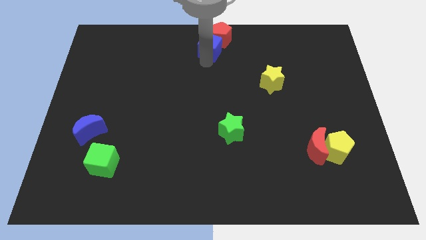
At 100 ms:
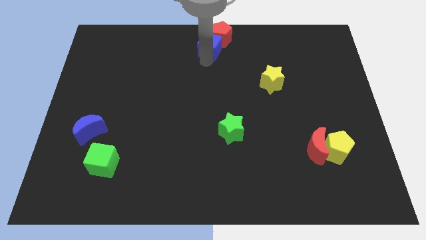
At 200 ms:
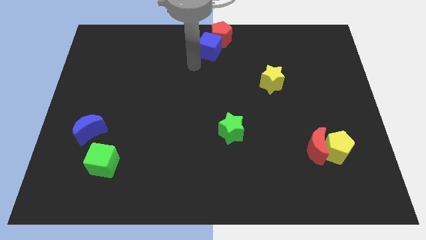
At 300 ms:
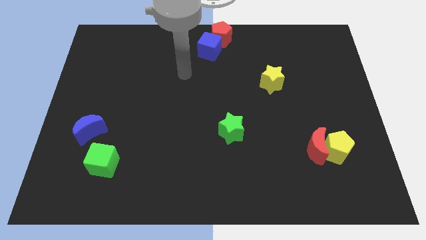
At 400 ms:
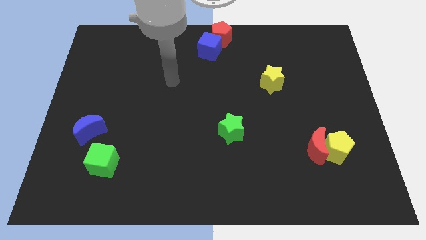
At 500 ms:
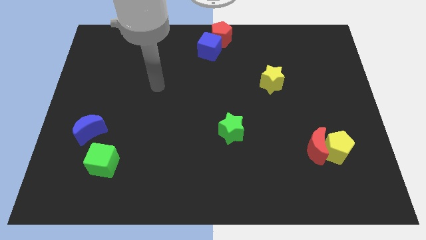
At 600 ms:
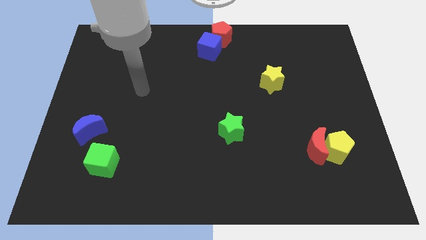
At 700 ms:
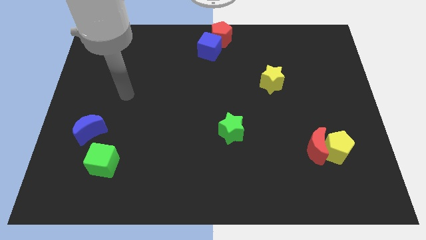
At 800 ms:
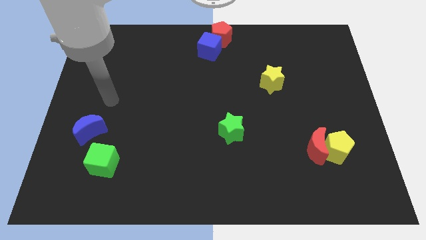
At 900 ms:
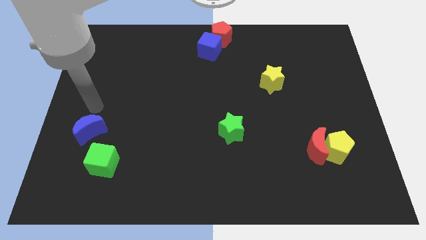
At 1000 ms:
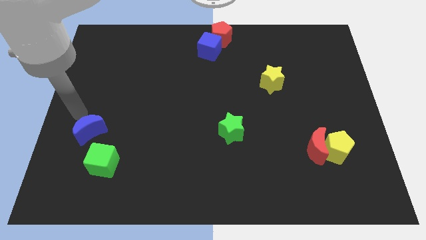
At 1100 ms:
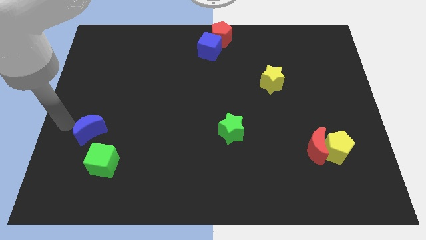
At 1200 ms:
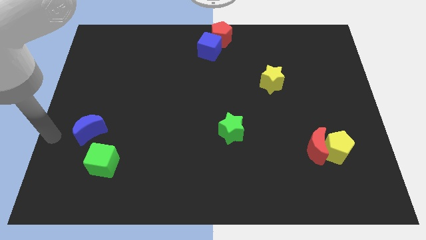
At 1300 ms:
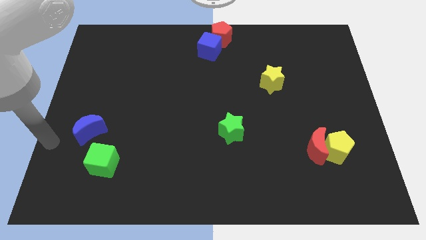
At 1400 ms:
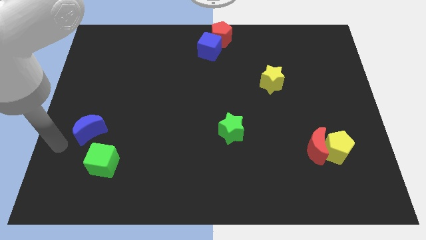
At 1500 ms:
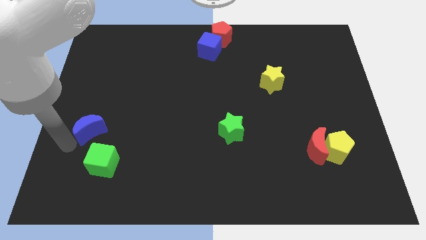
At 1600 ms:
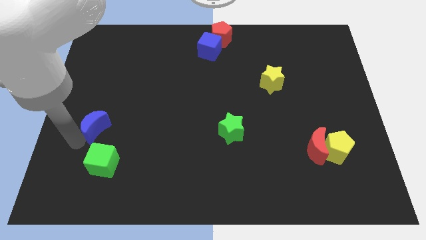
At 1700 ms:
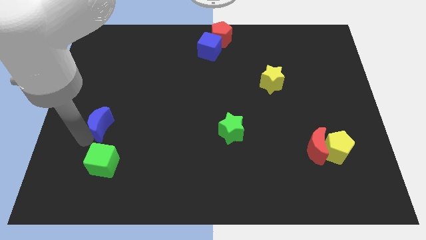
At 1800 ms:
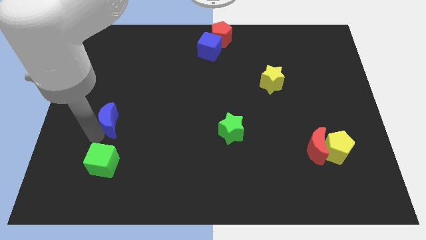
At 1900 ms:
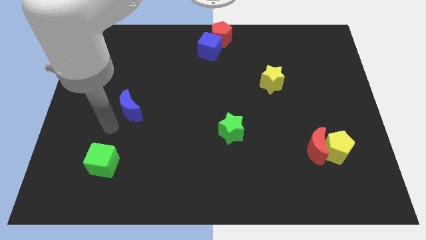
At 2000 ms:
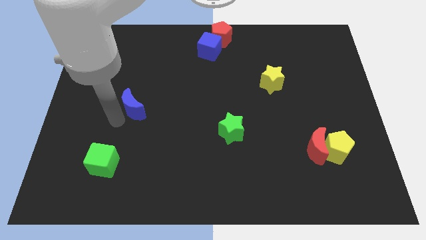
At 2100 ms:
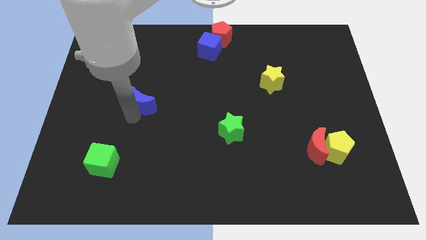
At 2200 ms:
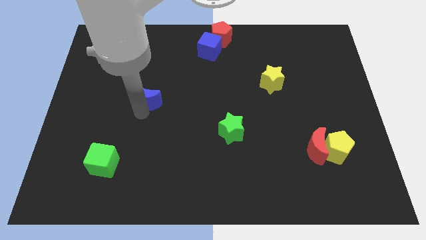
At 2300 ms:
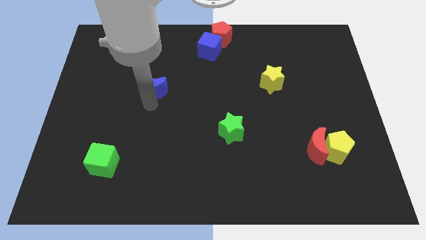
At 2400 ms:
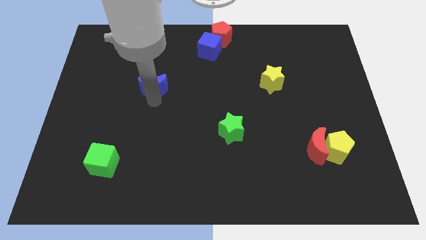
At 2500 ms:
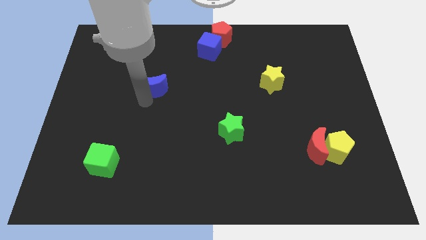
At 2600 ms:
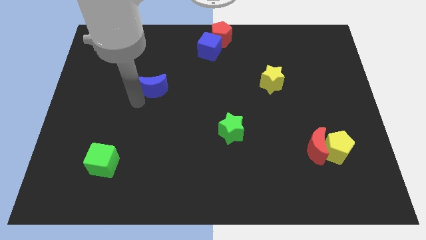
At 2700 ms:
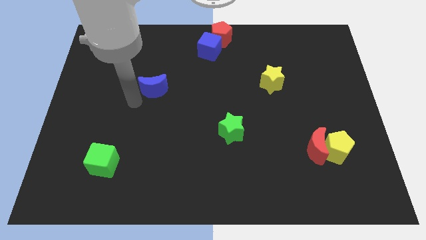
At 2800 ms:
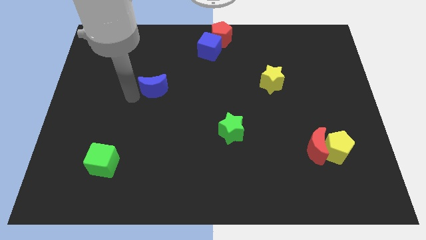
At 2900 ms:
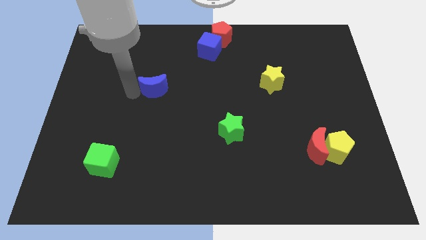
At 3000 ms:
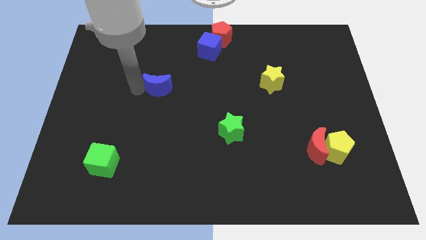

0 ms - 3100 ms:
push blue crescent towards upward

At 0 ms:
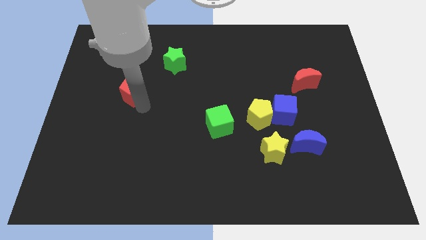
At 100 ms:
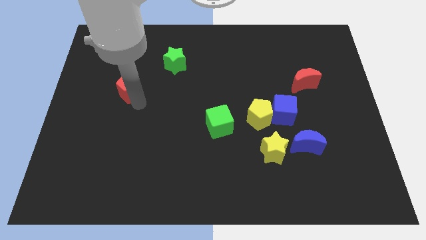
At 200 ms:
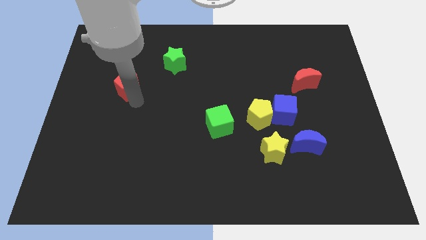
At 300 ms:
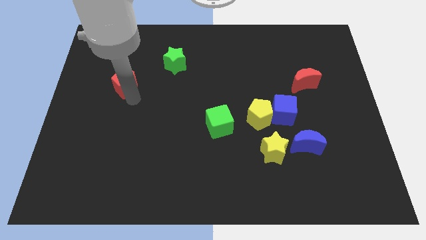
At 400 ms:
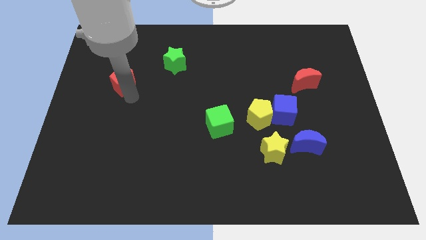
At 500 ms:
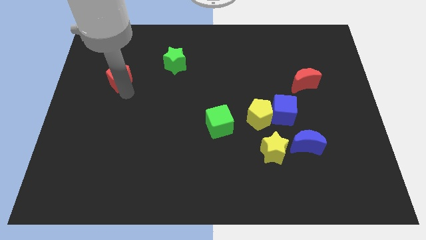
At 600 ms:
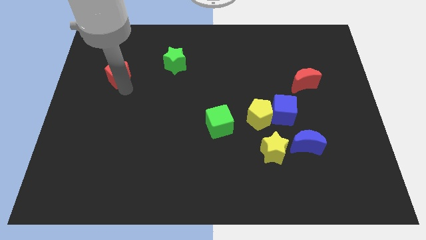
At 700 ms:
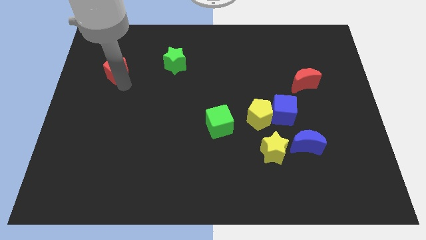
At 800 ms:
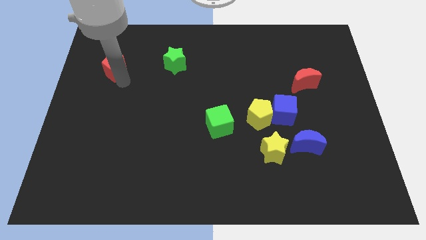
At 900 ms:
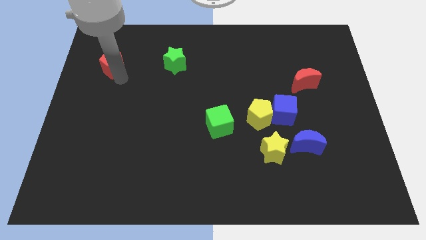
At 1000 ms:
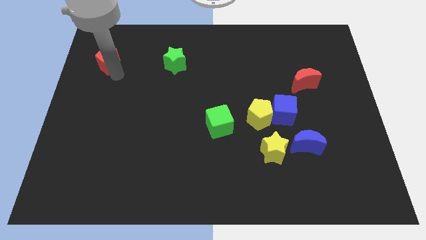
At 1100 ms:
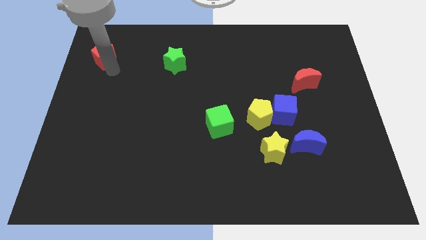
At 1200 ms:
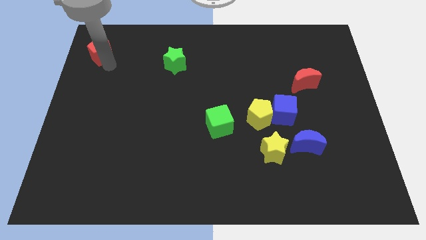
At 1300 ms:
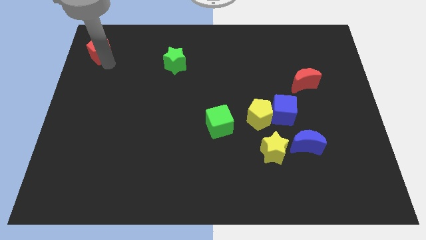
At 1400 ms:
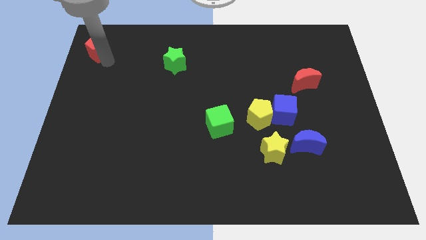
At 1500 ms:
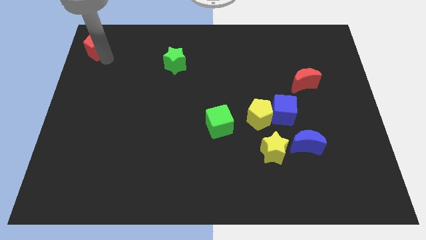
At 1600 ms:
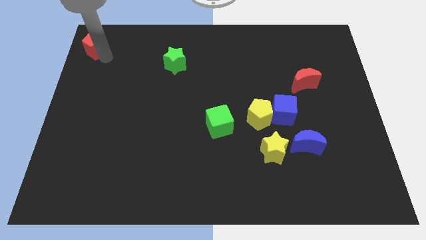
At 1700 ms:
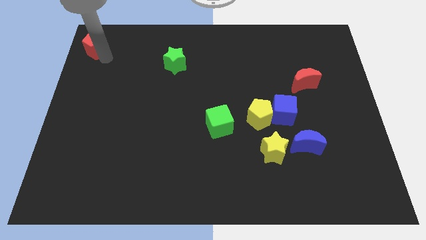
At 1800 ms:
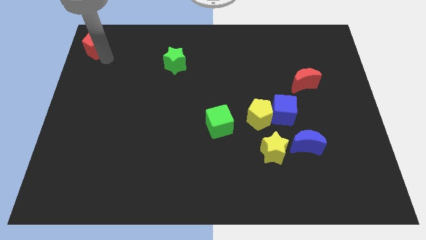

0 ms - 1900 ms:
place the red pentagon at the top left corner of the board

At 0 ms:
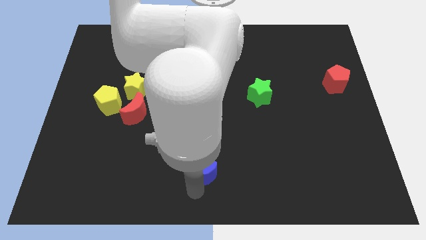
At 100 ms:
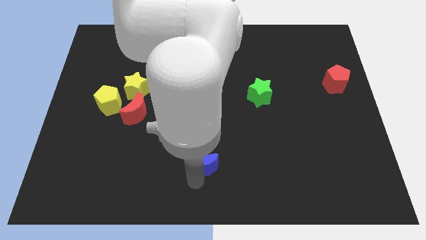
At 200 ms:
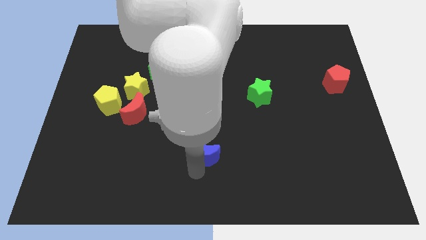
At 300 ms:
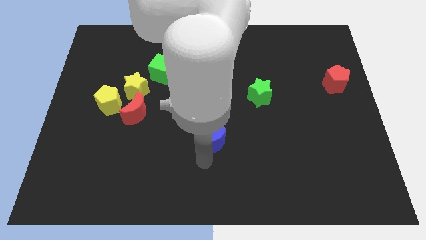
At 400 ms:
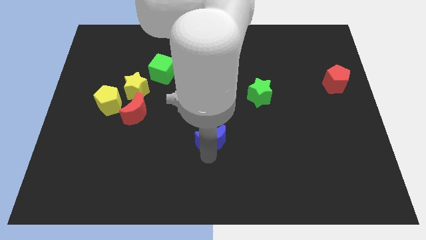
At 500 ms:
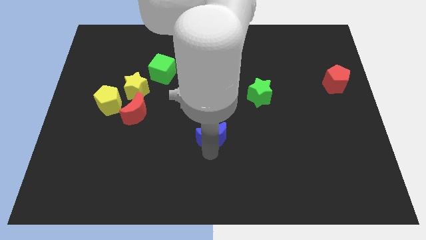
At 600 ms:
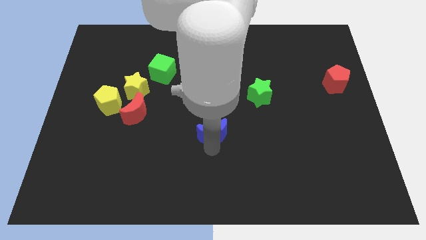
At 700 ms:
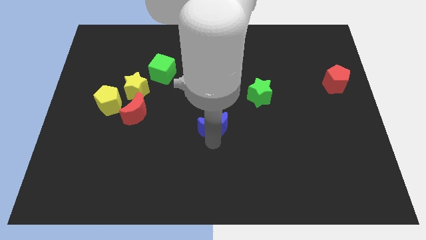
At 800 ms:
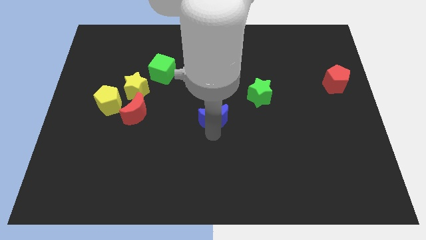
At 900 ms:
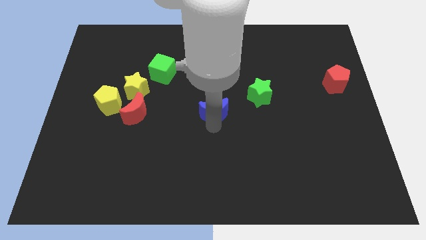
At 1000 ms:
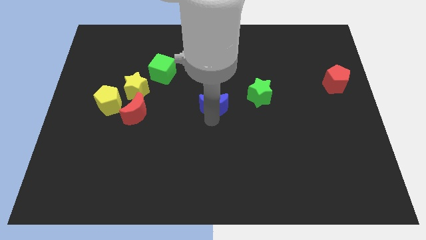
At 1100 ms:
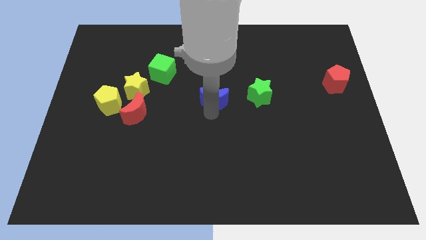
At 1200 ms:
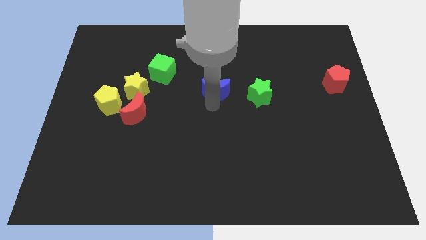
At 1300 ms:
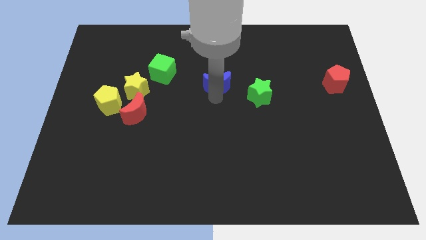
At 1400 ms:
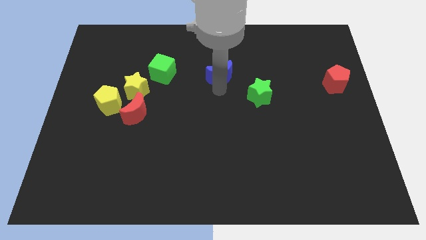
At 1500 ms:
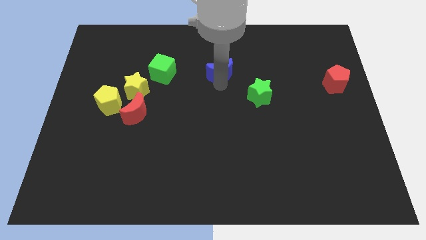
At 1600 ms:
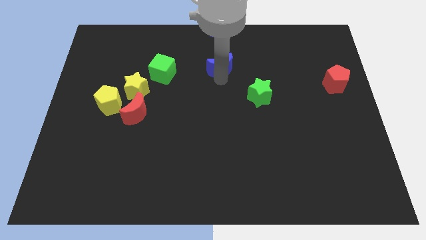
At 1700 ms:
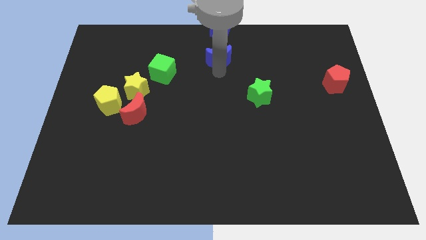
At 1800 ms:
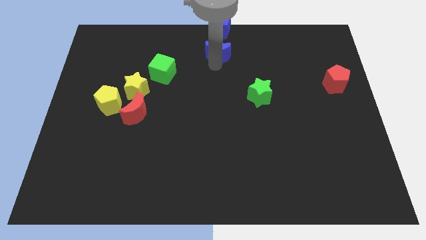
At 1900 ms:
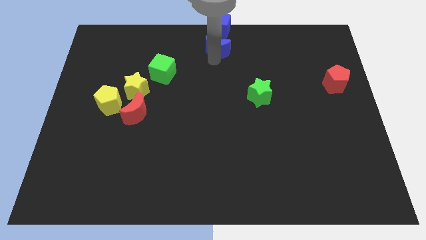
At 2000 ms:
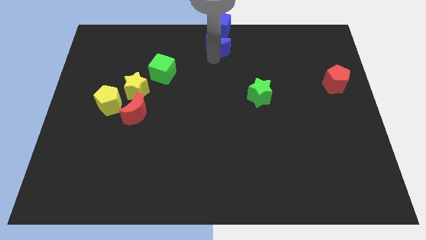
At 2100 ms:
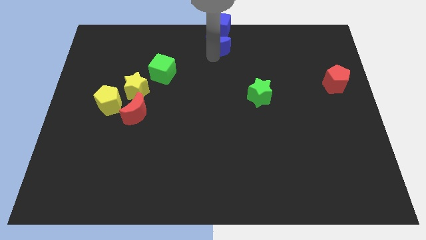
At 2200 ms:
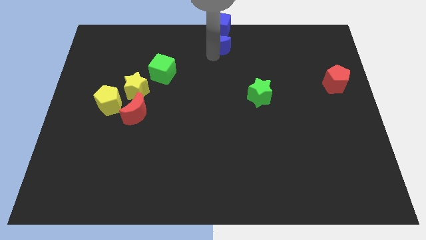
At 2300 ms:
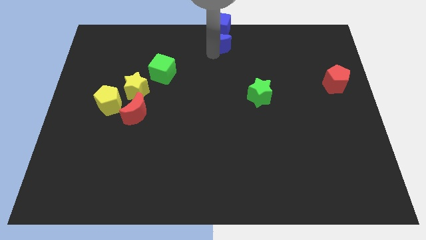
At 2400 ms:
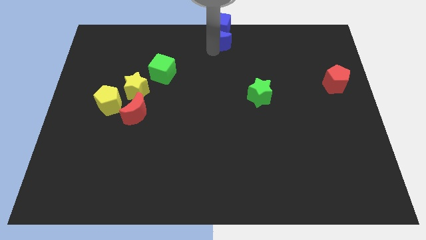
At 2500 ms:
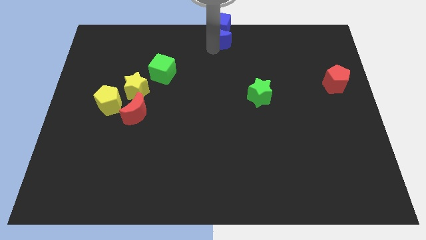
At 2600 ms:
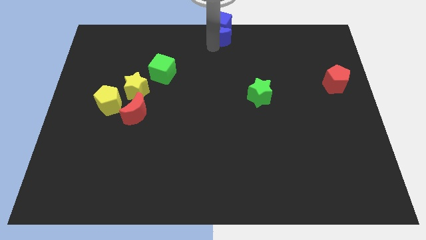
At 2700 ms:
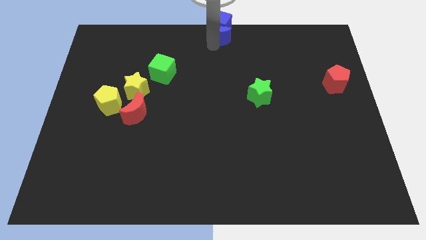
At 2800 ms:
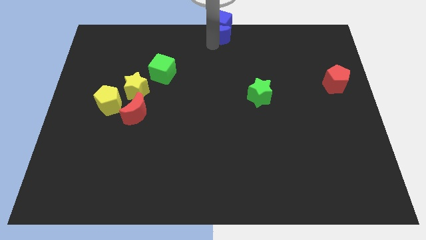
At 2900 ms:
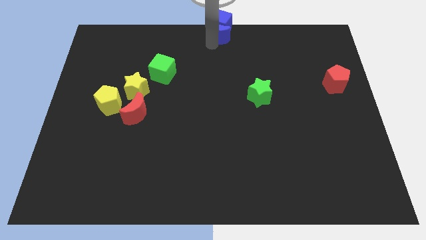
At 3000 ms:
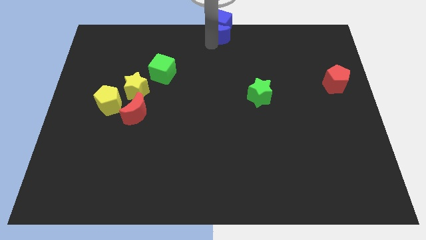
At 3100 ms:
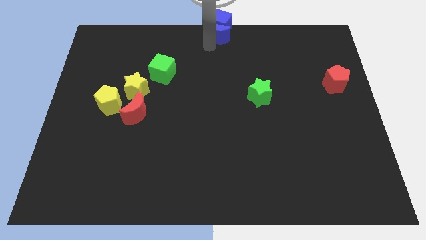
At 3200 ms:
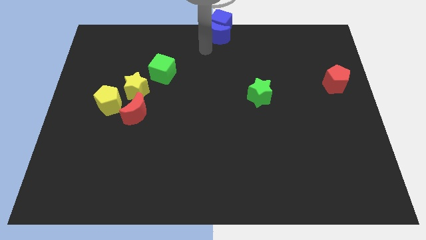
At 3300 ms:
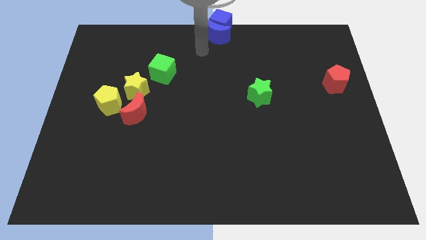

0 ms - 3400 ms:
slide the blue moon vertically below the blue cube

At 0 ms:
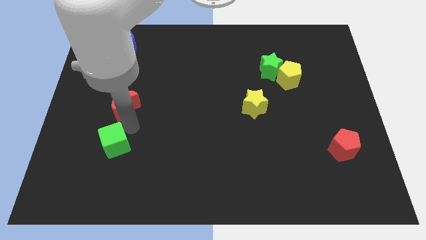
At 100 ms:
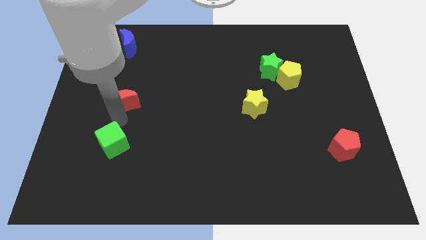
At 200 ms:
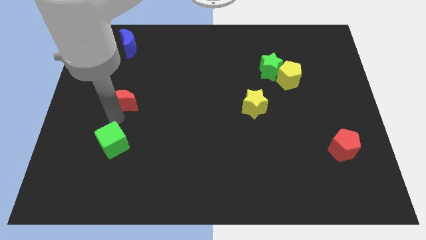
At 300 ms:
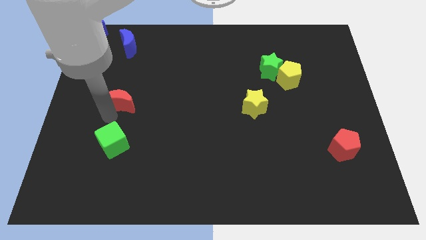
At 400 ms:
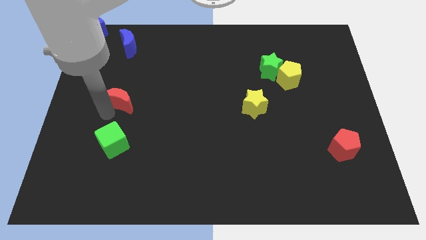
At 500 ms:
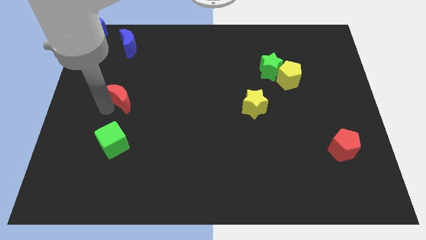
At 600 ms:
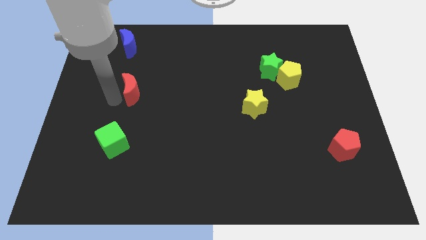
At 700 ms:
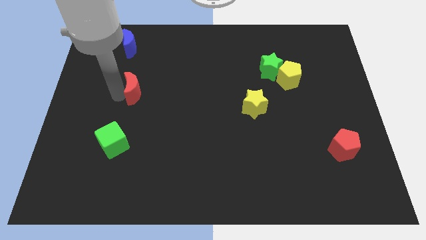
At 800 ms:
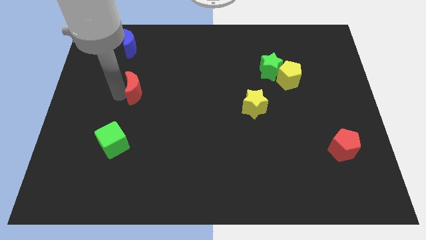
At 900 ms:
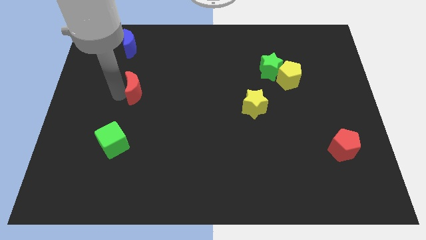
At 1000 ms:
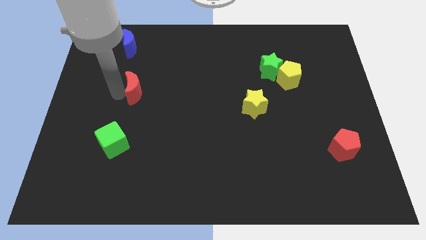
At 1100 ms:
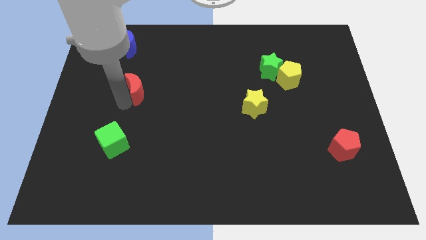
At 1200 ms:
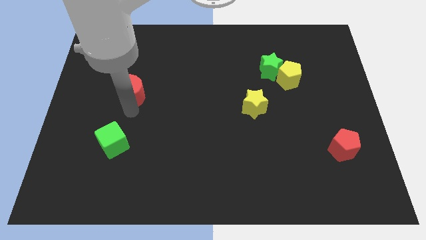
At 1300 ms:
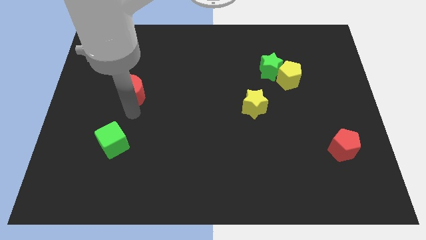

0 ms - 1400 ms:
move the red moon slightly towards the blue moon
